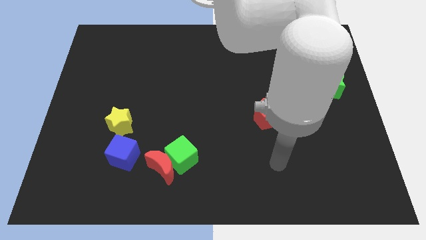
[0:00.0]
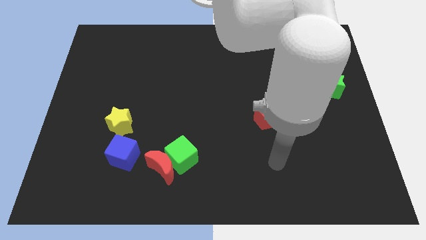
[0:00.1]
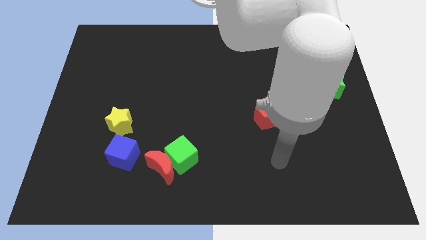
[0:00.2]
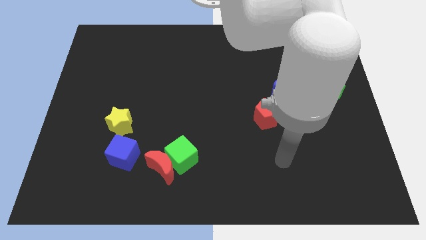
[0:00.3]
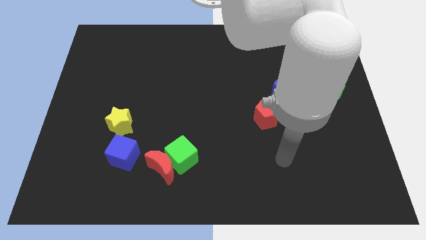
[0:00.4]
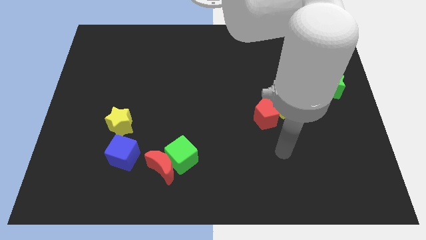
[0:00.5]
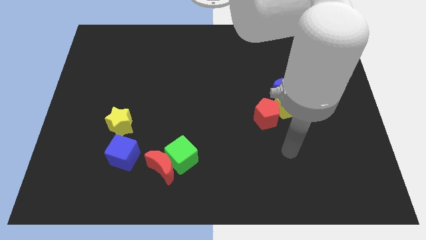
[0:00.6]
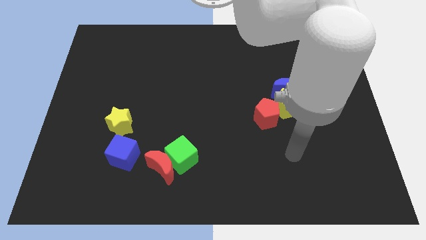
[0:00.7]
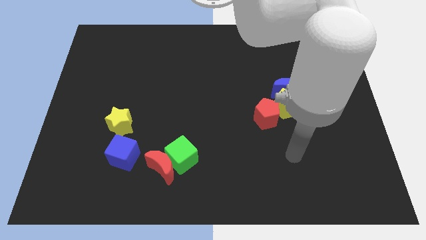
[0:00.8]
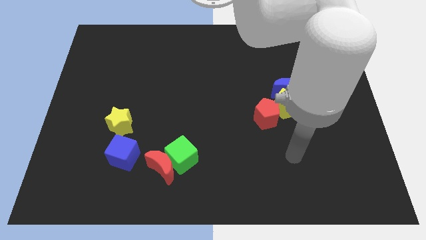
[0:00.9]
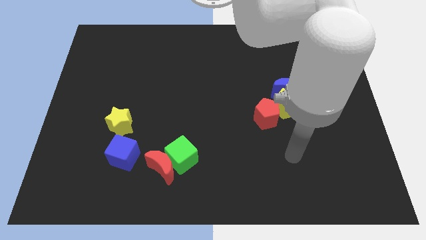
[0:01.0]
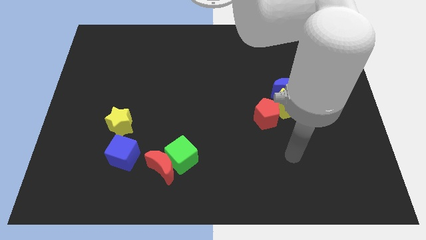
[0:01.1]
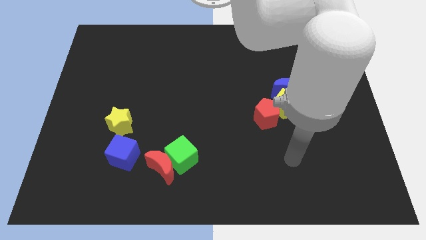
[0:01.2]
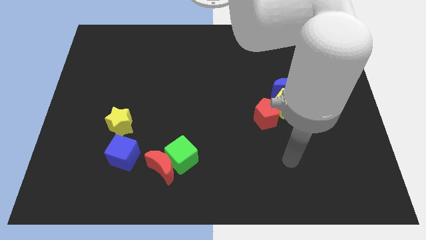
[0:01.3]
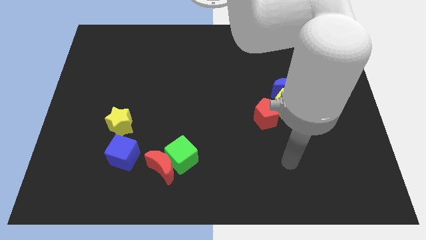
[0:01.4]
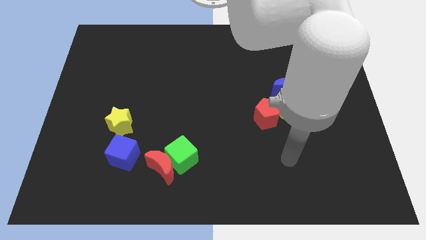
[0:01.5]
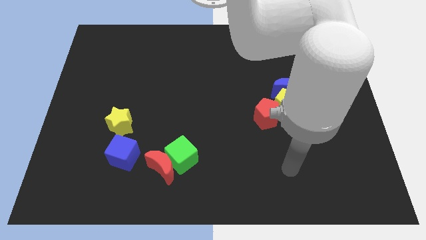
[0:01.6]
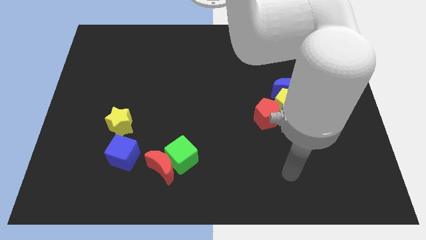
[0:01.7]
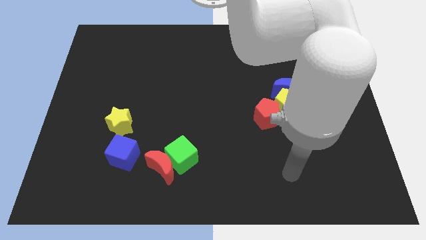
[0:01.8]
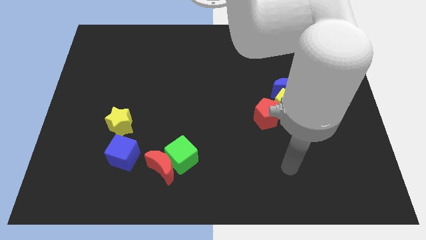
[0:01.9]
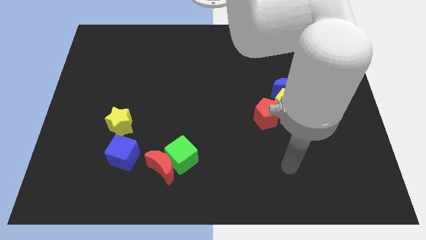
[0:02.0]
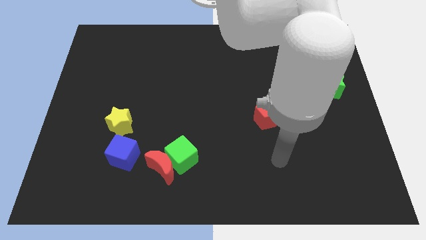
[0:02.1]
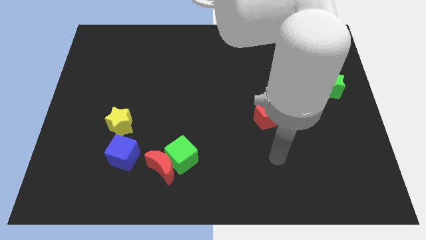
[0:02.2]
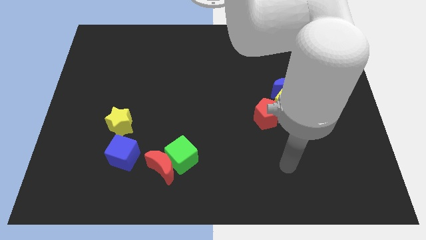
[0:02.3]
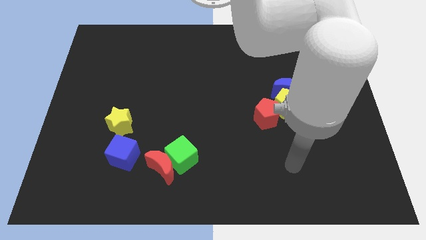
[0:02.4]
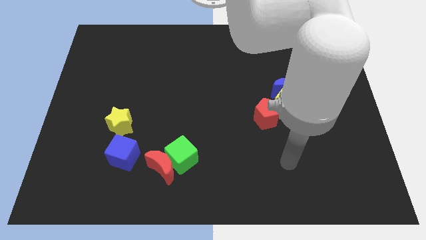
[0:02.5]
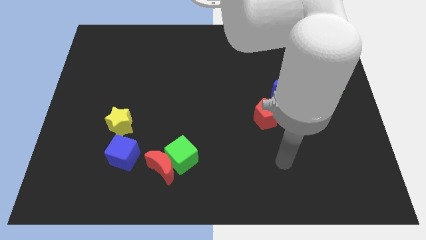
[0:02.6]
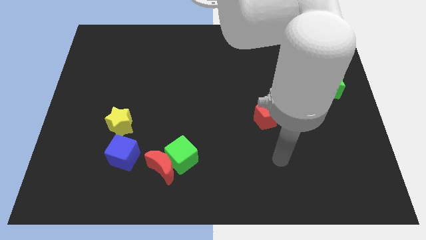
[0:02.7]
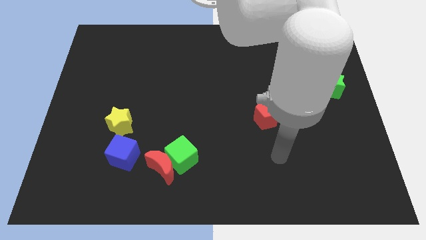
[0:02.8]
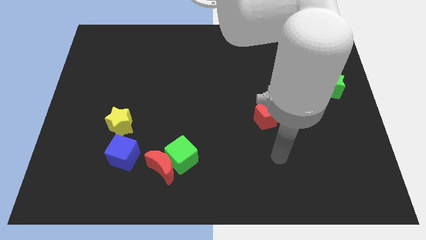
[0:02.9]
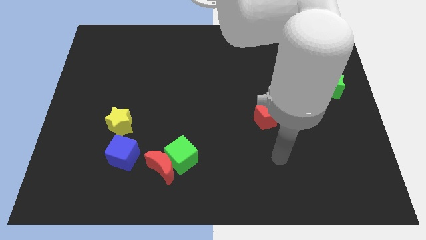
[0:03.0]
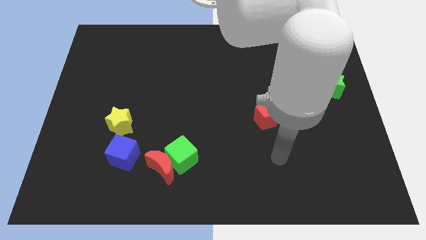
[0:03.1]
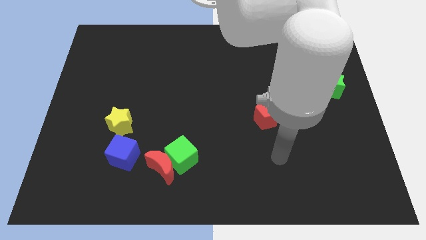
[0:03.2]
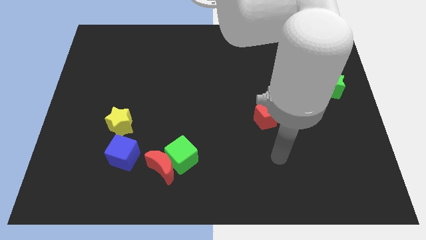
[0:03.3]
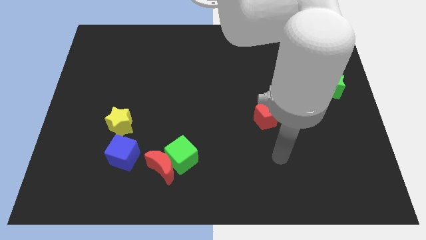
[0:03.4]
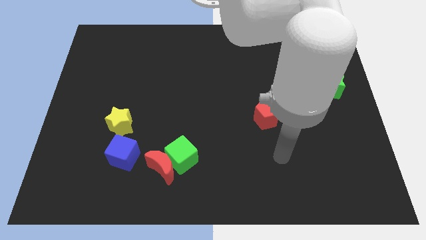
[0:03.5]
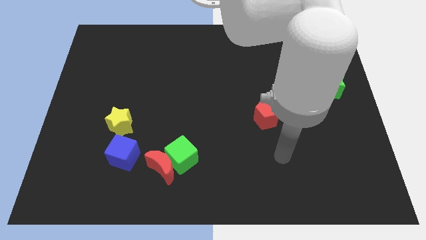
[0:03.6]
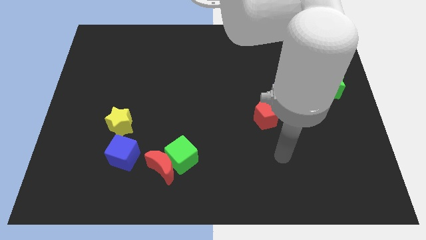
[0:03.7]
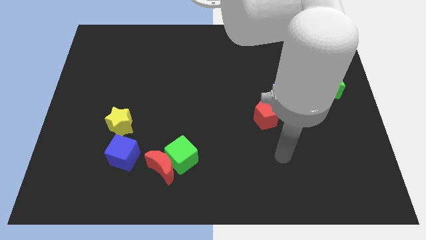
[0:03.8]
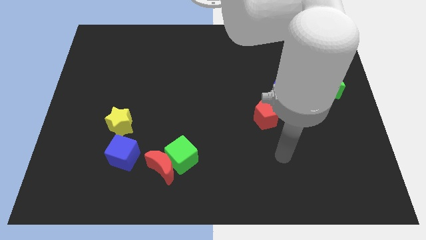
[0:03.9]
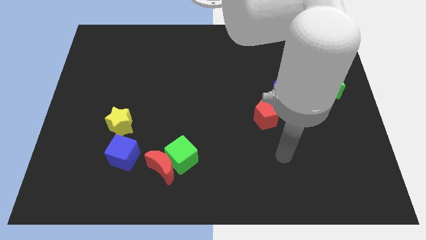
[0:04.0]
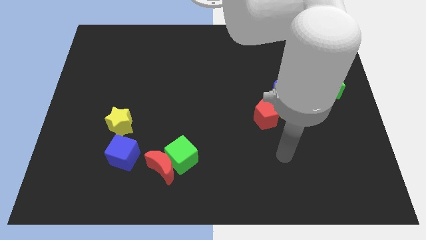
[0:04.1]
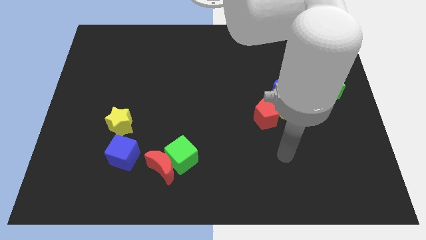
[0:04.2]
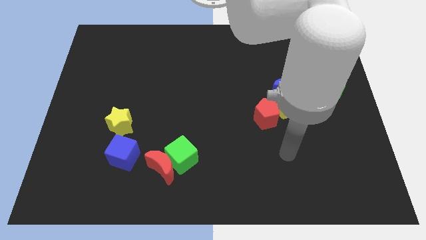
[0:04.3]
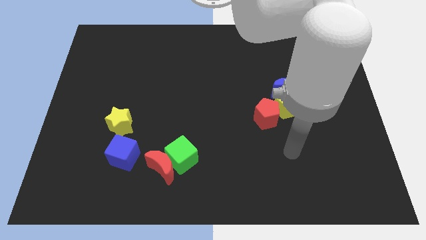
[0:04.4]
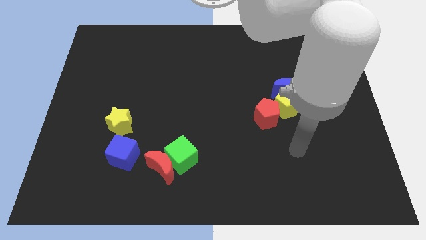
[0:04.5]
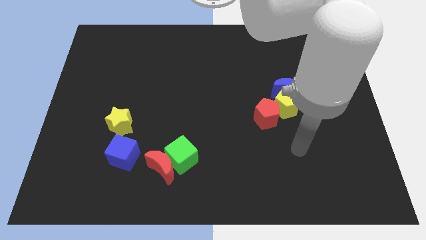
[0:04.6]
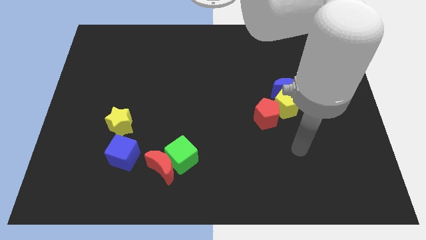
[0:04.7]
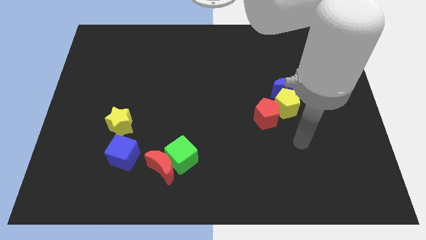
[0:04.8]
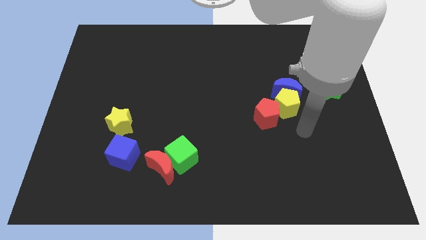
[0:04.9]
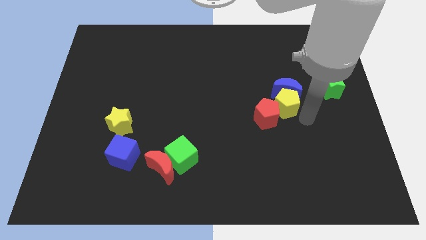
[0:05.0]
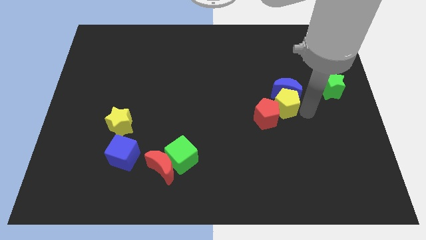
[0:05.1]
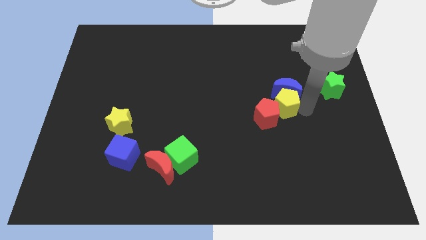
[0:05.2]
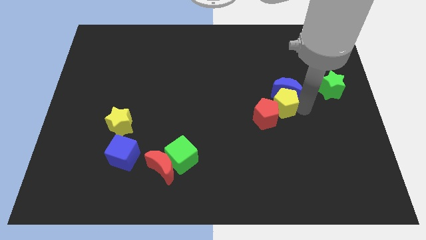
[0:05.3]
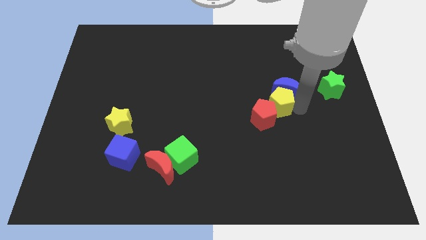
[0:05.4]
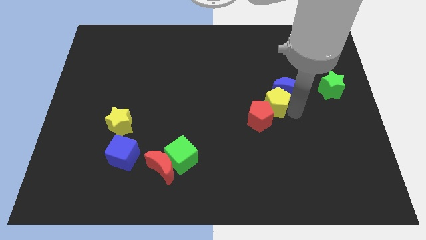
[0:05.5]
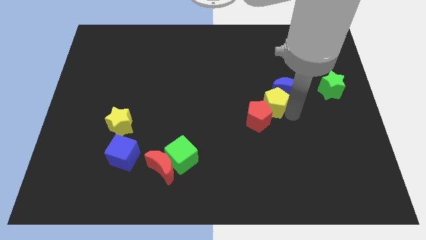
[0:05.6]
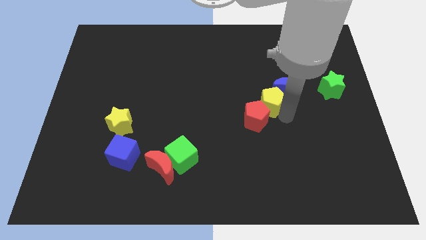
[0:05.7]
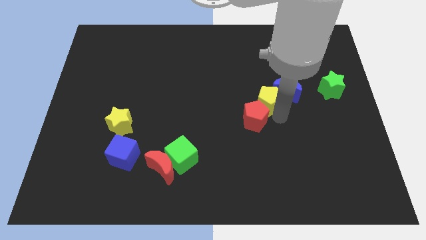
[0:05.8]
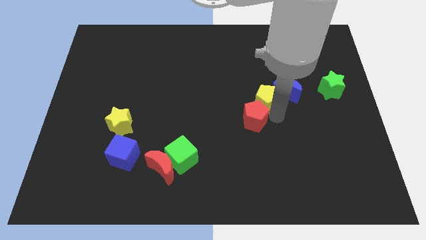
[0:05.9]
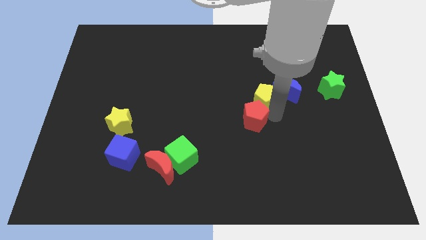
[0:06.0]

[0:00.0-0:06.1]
slightly push the yellow pentagon to the top of the board

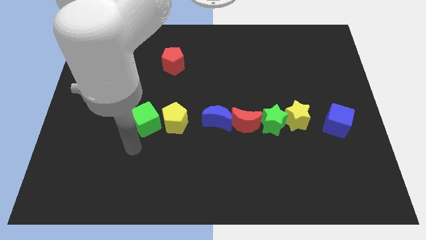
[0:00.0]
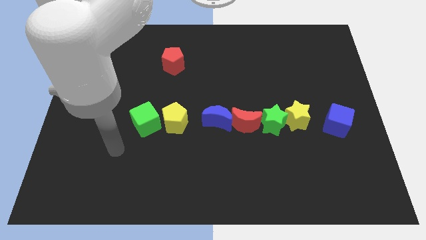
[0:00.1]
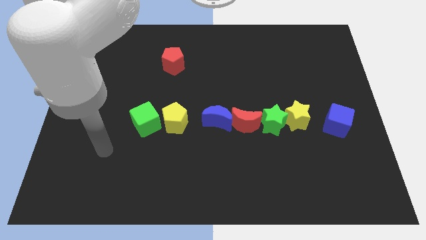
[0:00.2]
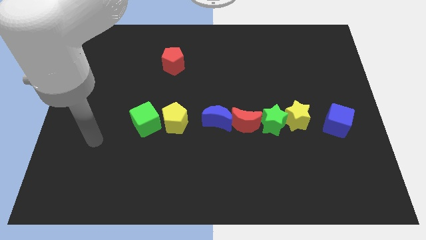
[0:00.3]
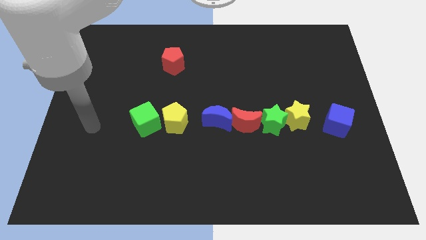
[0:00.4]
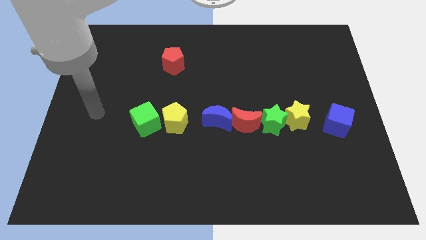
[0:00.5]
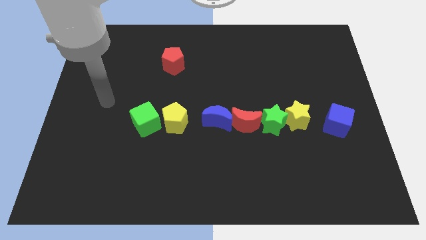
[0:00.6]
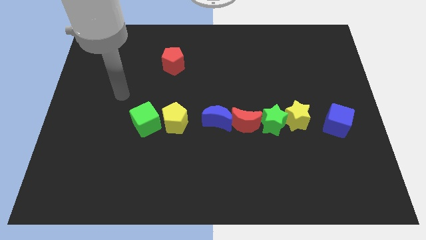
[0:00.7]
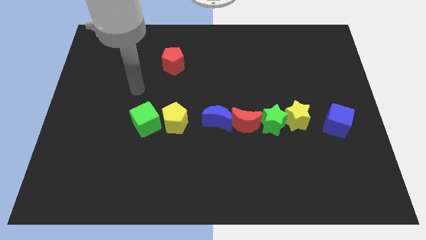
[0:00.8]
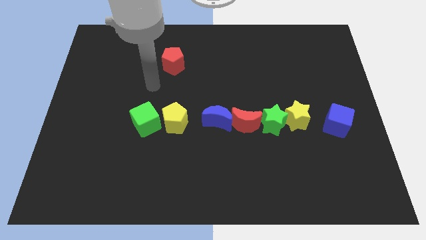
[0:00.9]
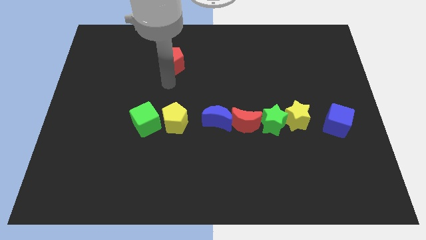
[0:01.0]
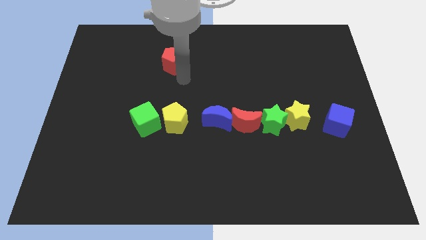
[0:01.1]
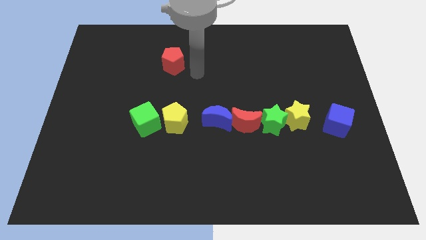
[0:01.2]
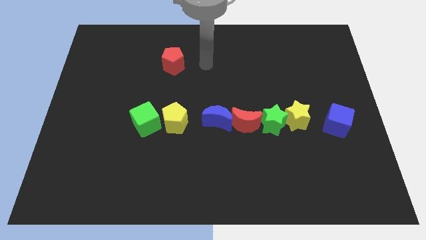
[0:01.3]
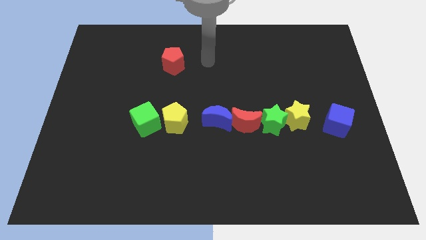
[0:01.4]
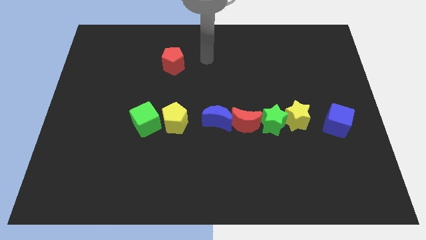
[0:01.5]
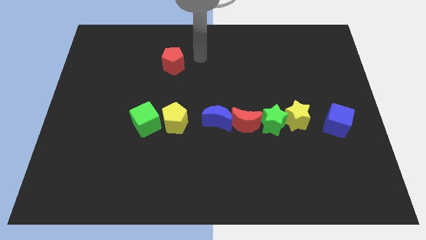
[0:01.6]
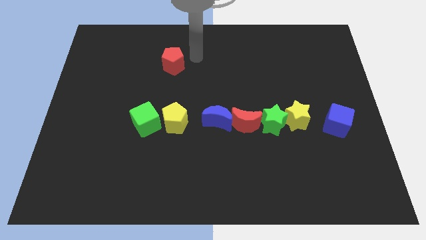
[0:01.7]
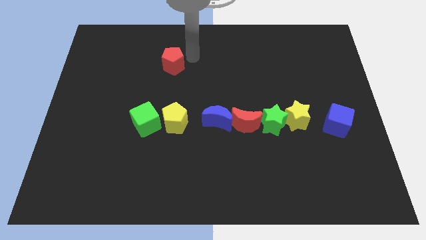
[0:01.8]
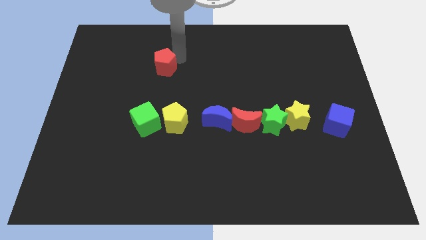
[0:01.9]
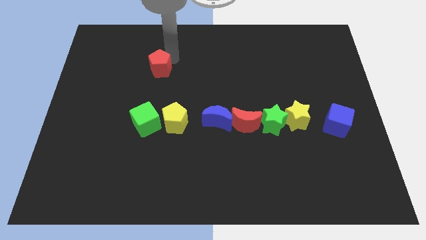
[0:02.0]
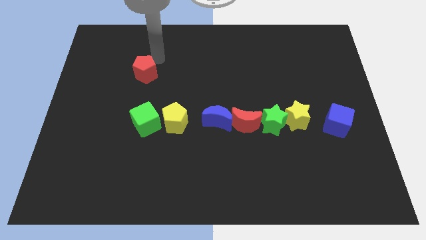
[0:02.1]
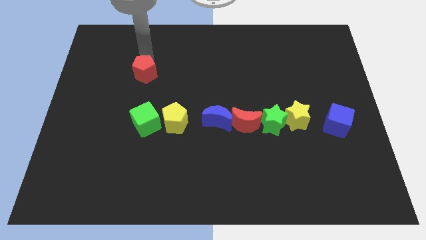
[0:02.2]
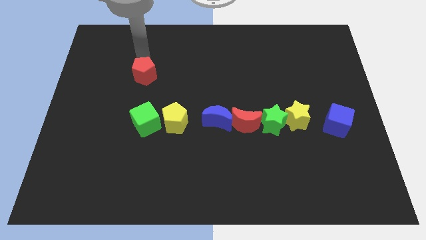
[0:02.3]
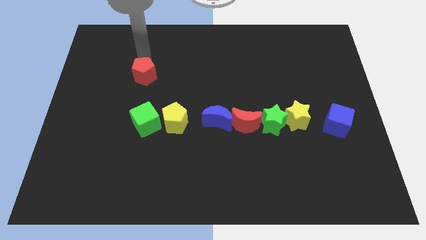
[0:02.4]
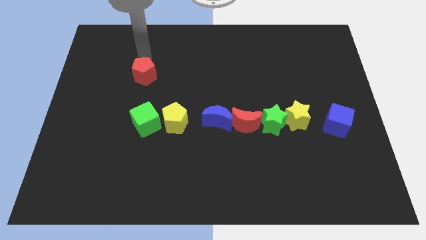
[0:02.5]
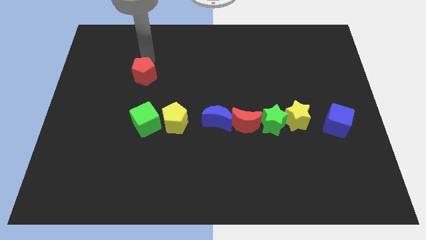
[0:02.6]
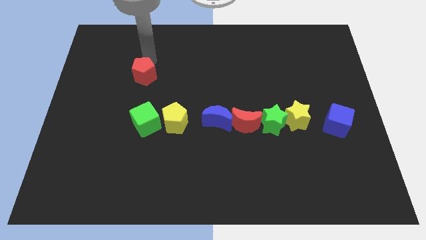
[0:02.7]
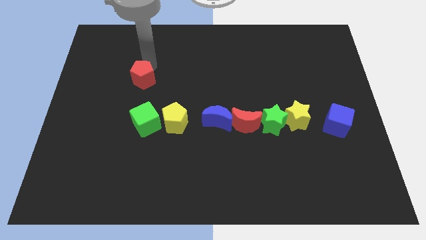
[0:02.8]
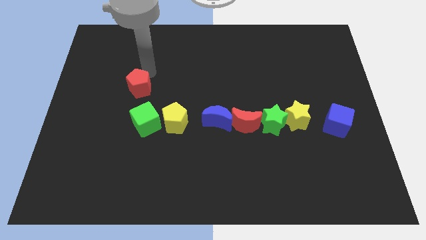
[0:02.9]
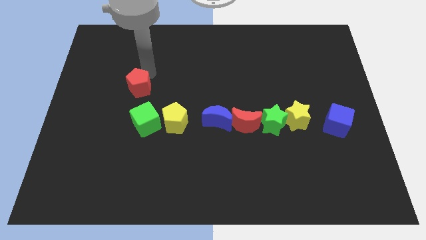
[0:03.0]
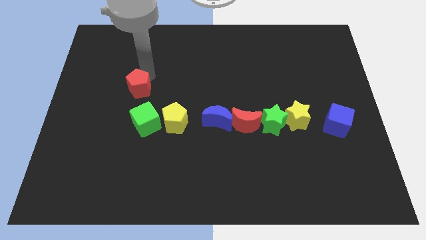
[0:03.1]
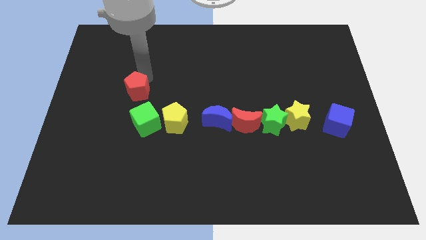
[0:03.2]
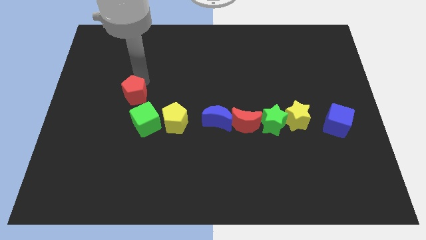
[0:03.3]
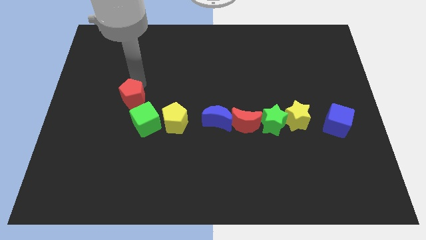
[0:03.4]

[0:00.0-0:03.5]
place the red pentagon diagonally top left to the green cube
